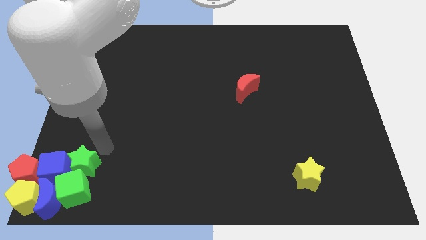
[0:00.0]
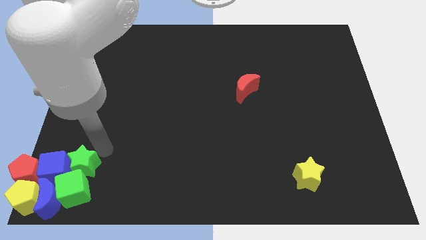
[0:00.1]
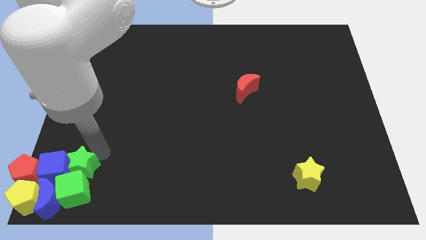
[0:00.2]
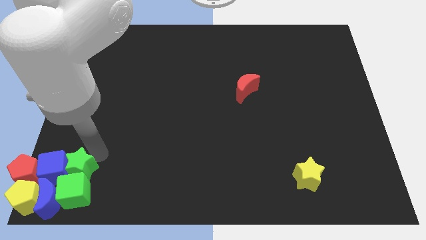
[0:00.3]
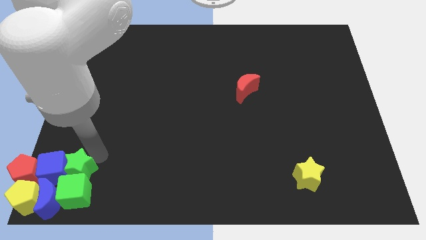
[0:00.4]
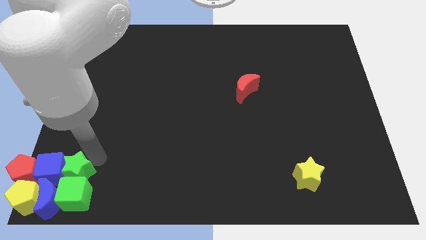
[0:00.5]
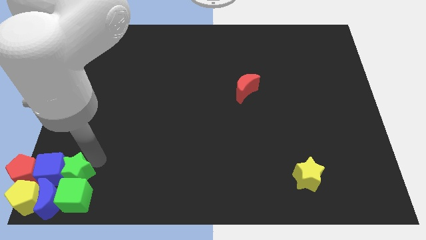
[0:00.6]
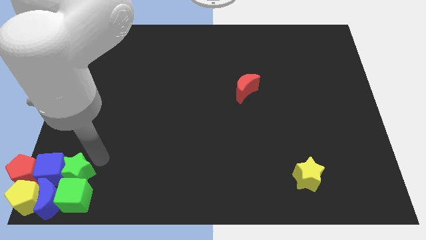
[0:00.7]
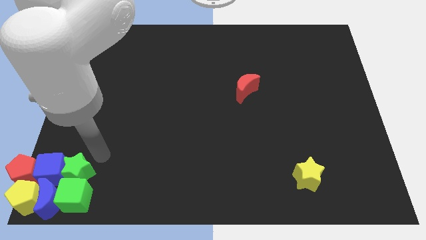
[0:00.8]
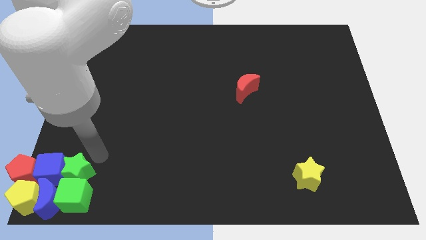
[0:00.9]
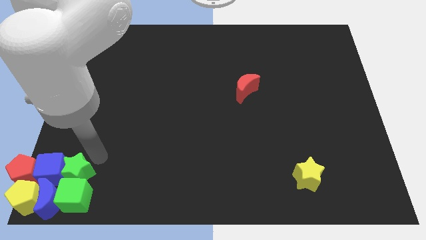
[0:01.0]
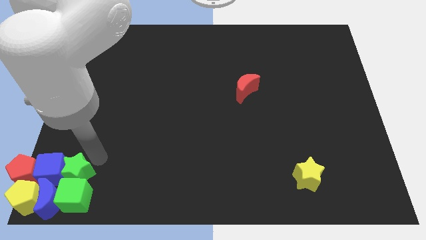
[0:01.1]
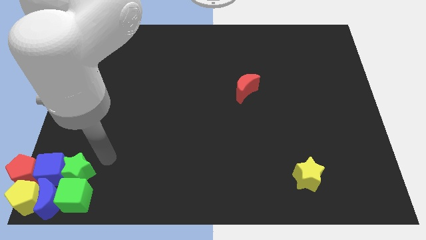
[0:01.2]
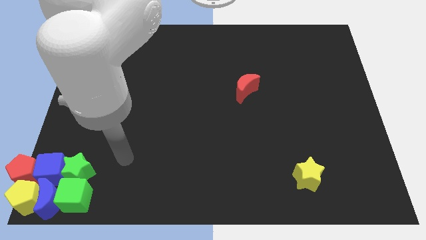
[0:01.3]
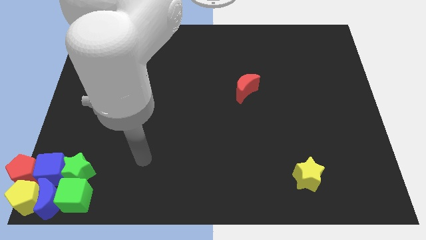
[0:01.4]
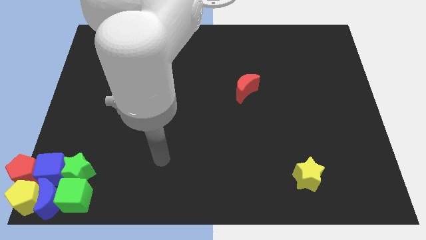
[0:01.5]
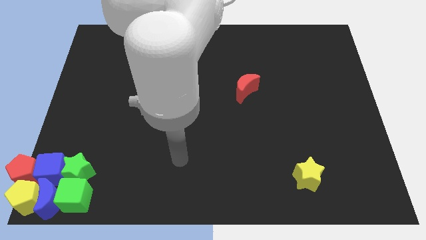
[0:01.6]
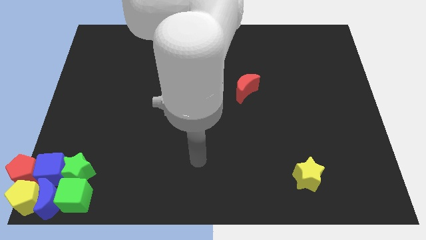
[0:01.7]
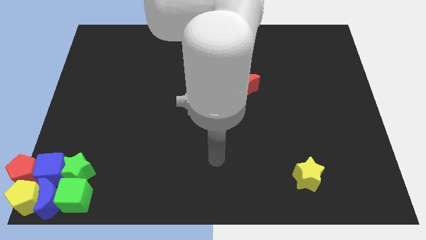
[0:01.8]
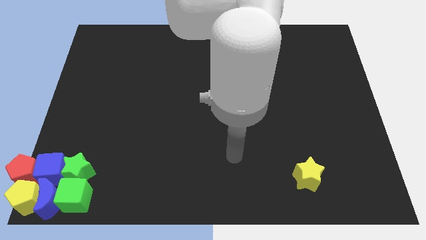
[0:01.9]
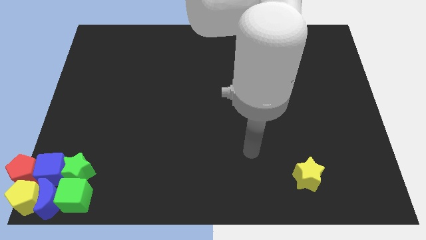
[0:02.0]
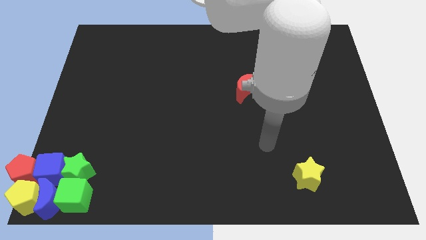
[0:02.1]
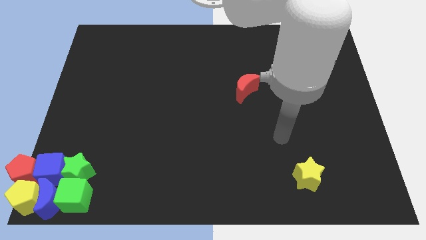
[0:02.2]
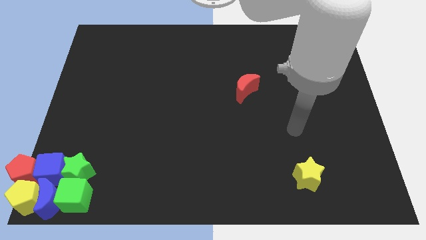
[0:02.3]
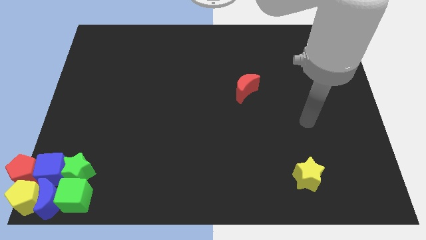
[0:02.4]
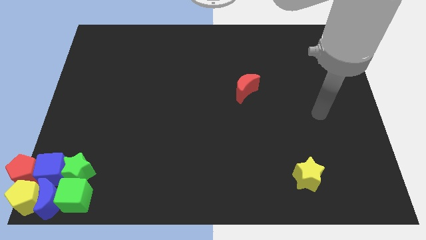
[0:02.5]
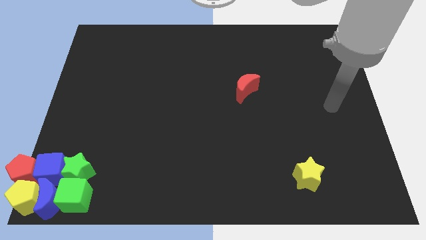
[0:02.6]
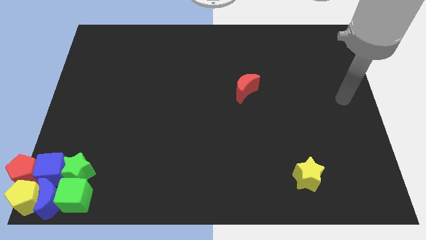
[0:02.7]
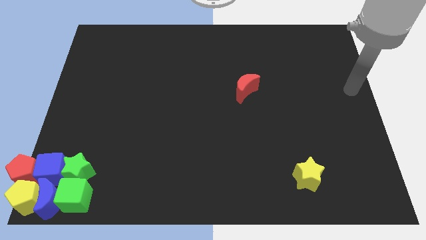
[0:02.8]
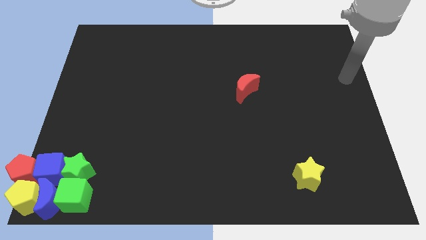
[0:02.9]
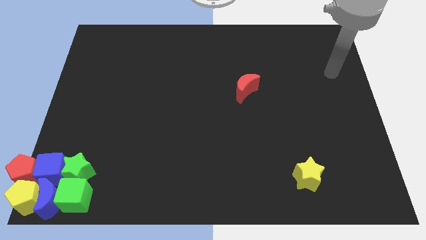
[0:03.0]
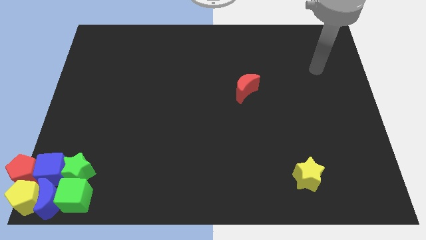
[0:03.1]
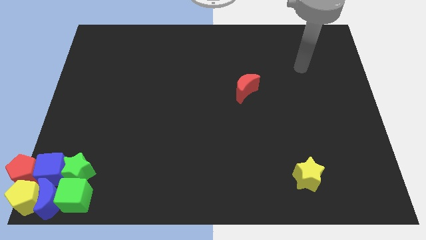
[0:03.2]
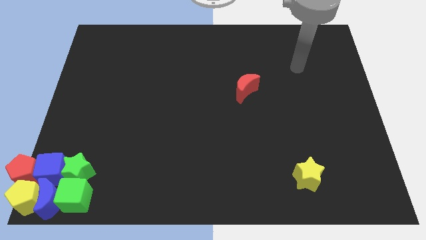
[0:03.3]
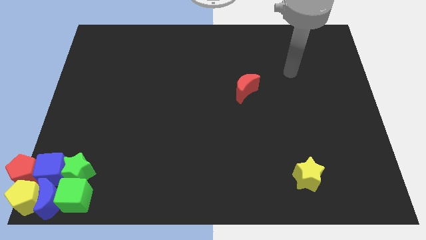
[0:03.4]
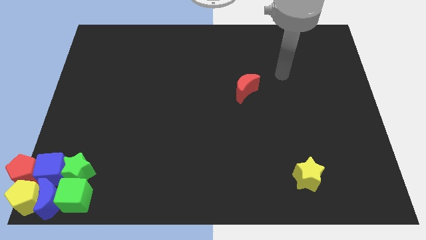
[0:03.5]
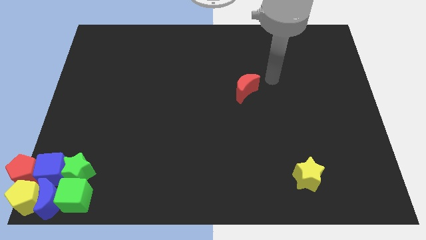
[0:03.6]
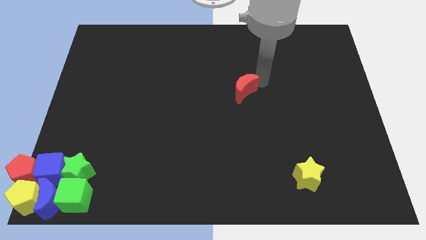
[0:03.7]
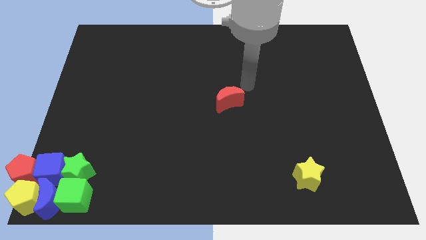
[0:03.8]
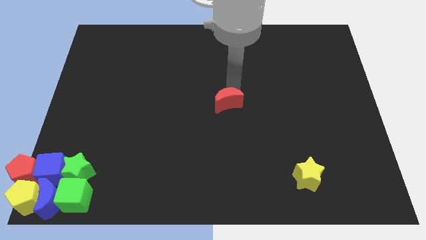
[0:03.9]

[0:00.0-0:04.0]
place your arm to the top of red moon

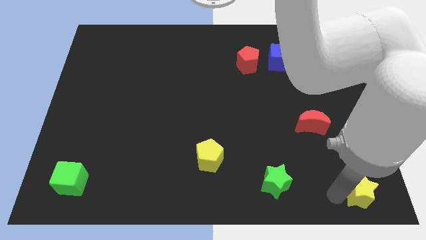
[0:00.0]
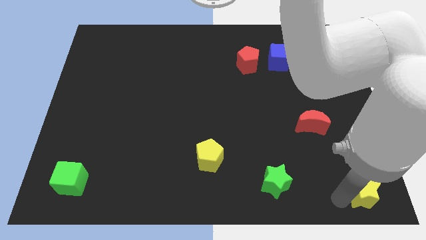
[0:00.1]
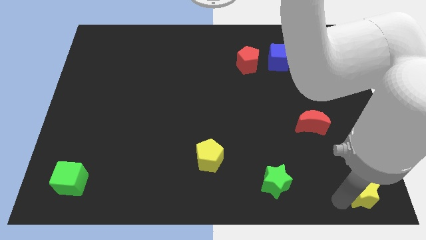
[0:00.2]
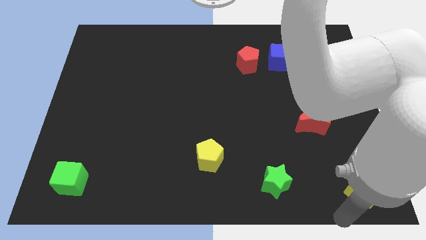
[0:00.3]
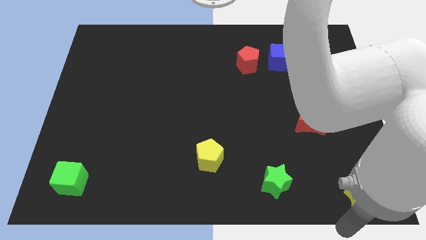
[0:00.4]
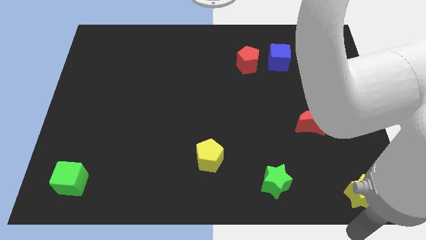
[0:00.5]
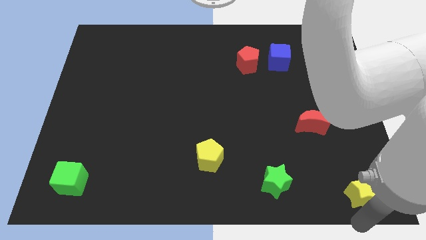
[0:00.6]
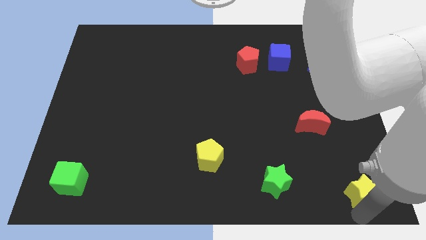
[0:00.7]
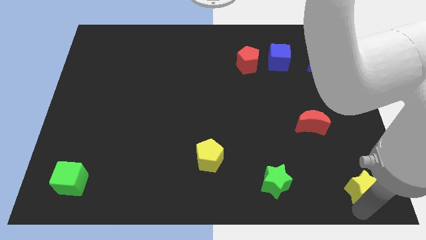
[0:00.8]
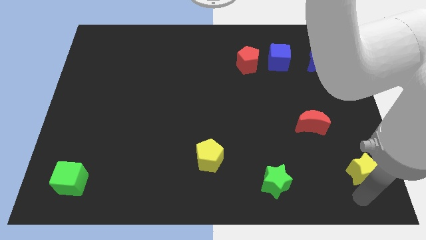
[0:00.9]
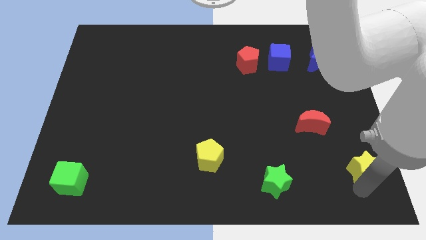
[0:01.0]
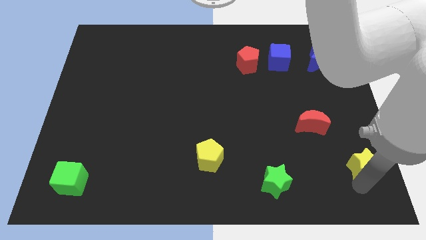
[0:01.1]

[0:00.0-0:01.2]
slightly push the yellow star upwards

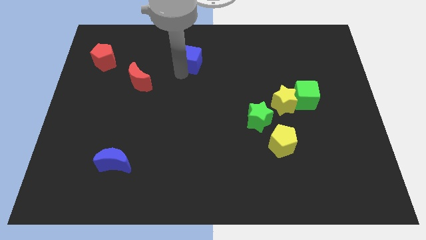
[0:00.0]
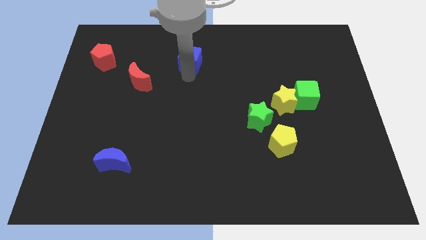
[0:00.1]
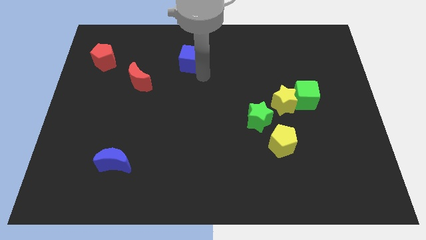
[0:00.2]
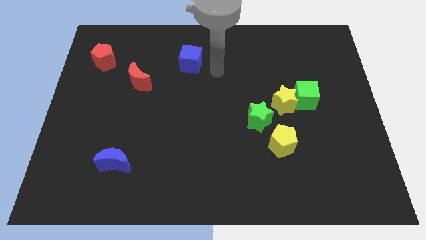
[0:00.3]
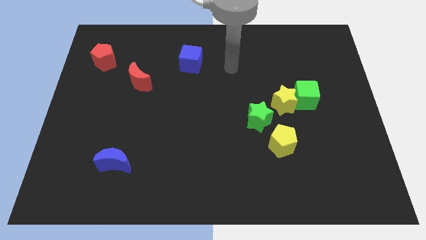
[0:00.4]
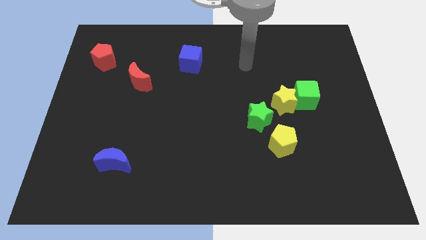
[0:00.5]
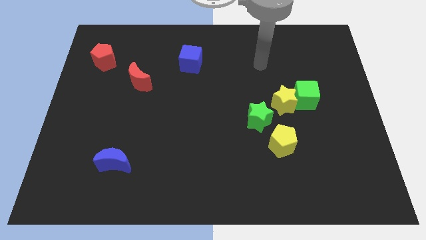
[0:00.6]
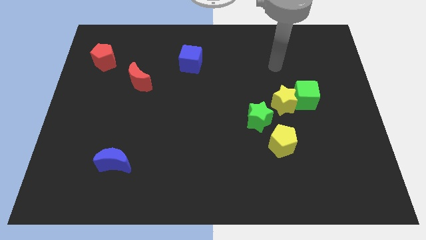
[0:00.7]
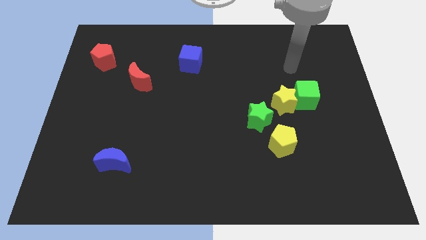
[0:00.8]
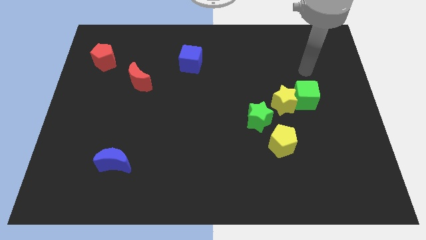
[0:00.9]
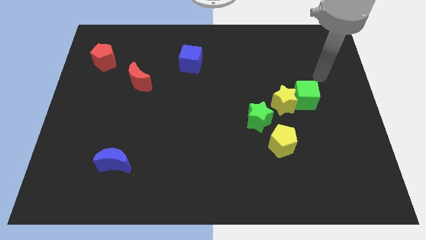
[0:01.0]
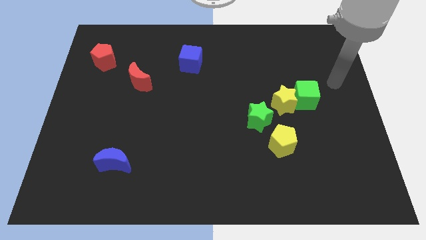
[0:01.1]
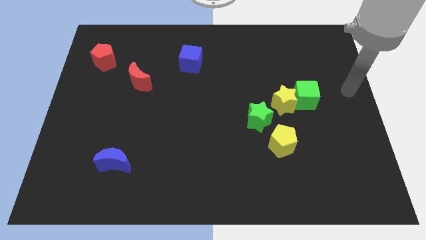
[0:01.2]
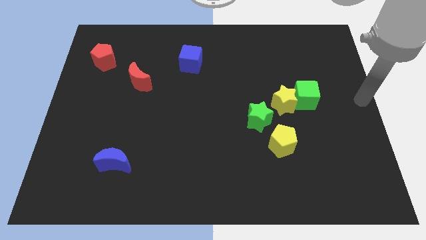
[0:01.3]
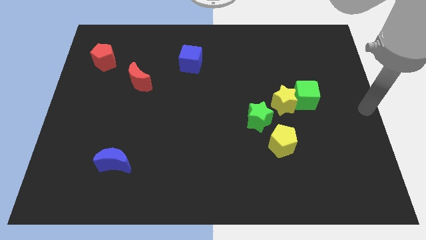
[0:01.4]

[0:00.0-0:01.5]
place your arm at the center right side of the board

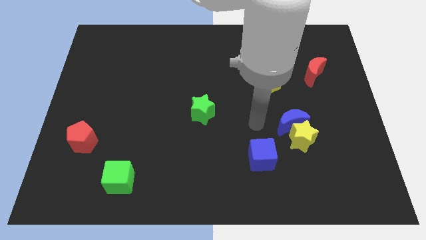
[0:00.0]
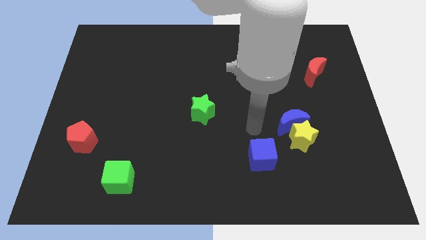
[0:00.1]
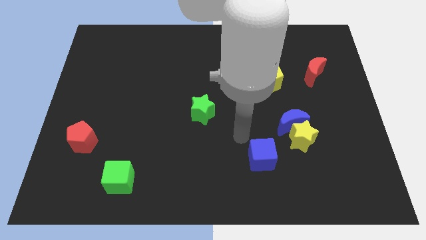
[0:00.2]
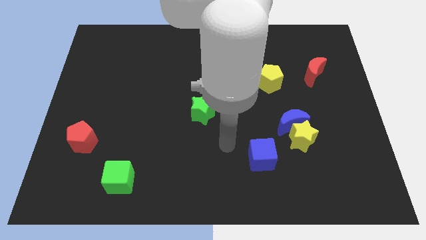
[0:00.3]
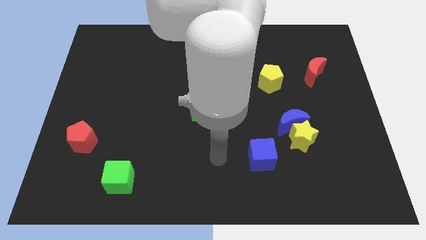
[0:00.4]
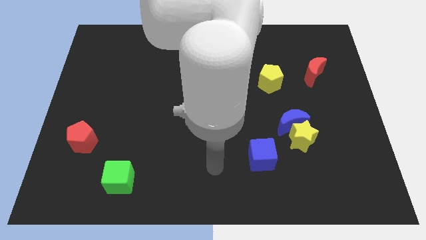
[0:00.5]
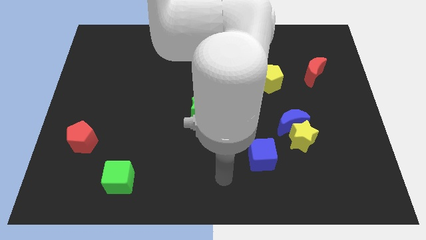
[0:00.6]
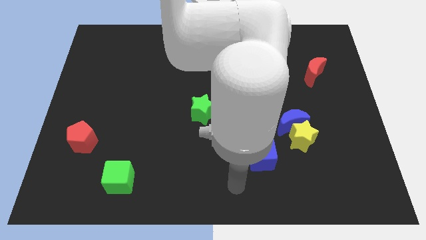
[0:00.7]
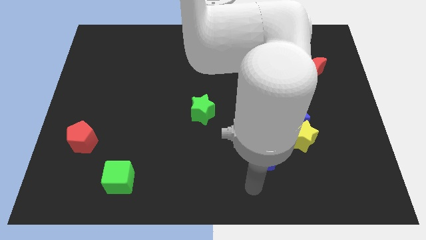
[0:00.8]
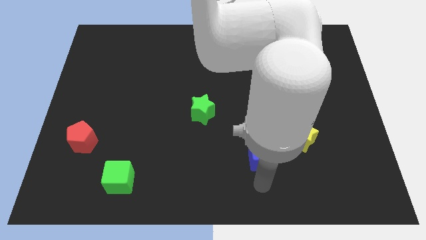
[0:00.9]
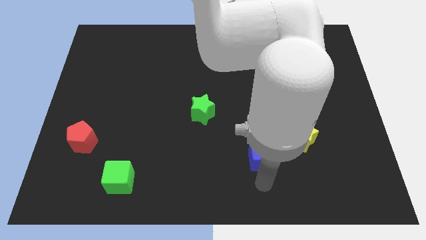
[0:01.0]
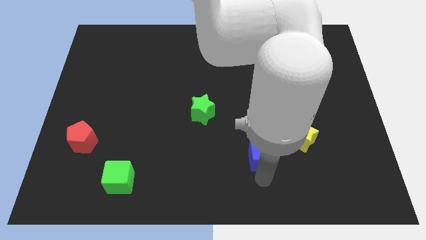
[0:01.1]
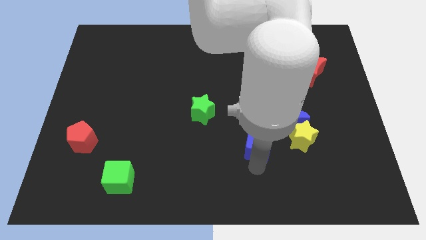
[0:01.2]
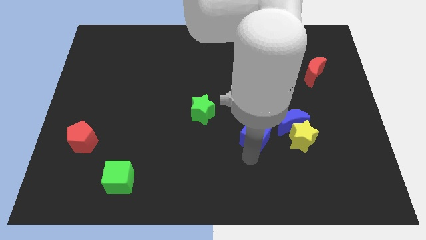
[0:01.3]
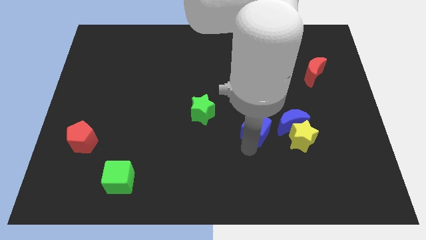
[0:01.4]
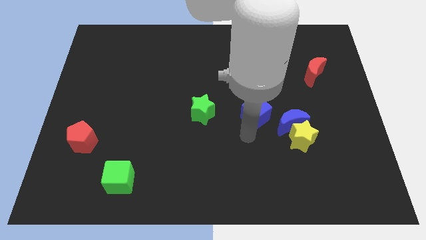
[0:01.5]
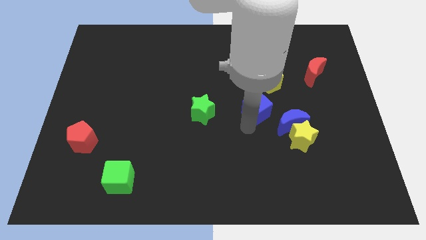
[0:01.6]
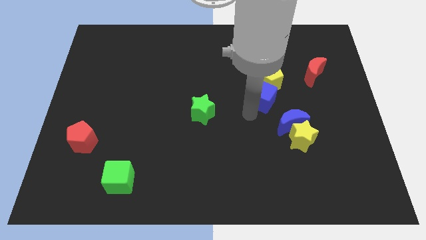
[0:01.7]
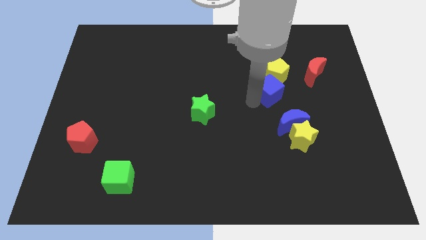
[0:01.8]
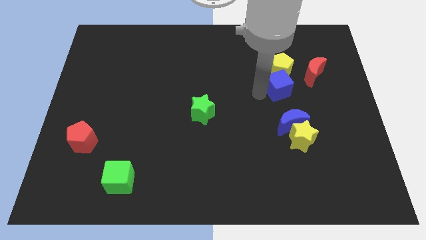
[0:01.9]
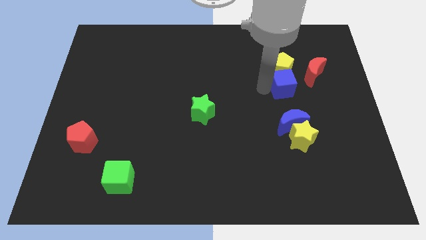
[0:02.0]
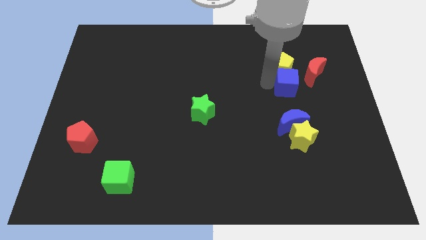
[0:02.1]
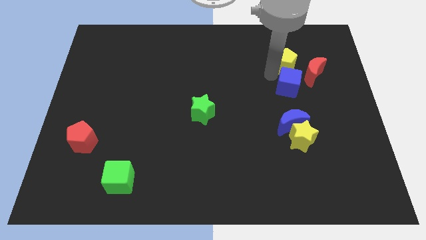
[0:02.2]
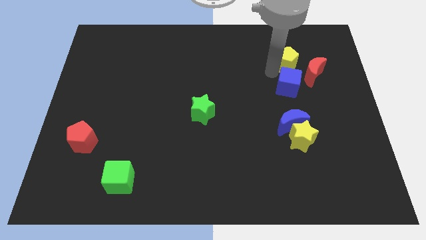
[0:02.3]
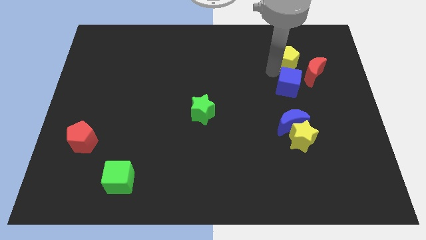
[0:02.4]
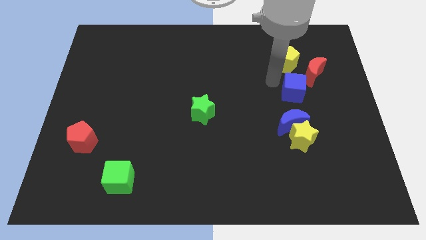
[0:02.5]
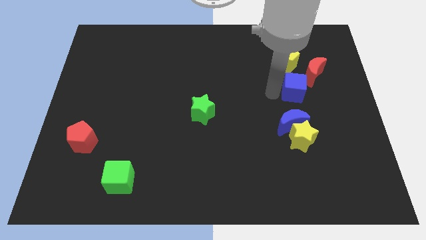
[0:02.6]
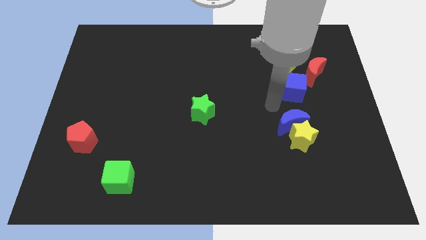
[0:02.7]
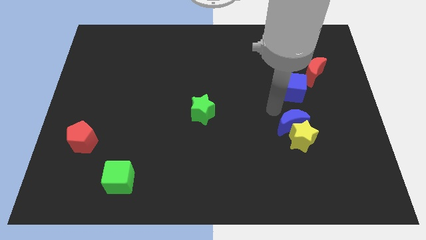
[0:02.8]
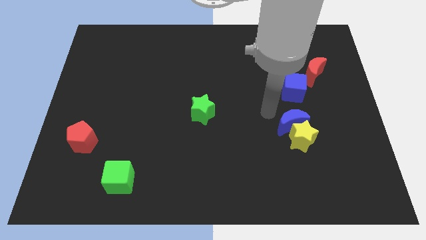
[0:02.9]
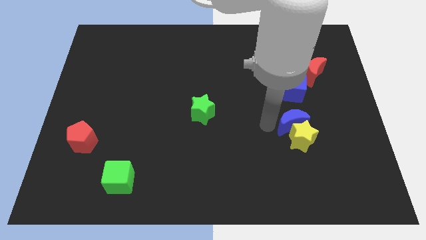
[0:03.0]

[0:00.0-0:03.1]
move blue cube near to the yellow pentagon
